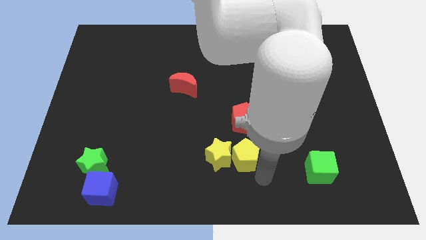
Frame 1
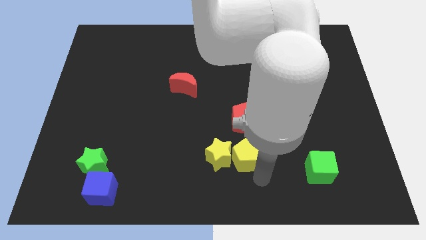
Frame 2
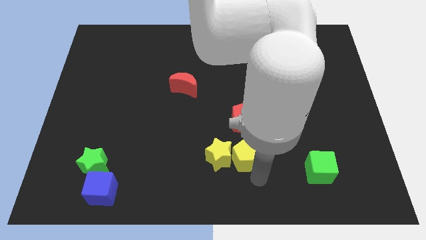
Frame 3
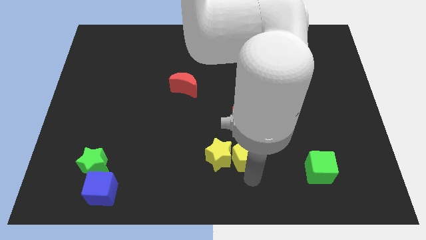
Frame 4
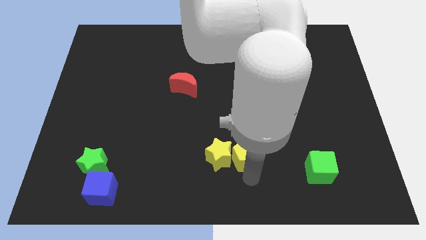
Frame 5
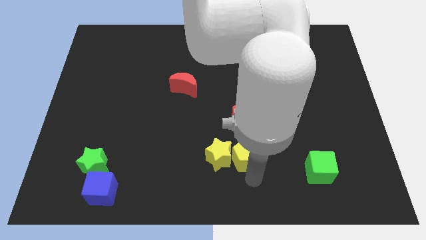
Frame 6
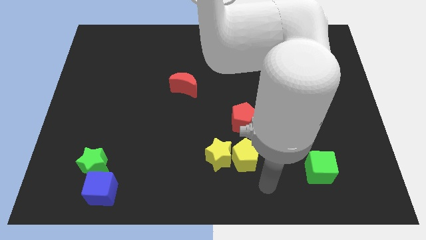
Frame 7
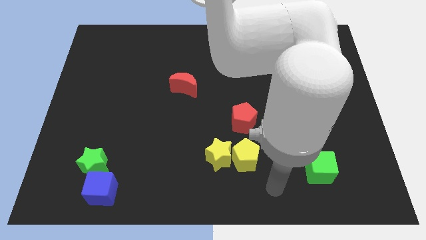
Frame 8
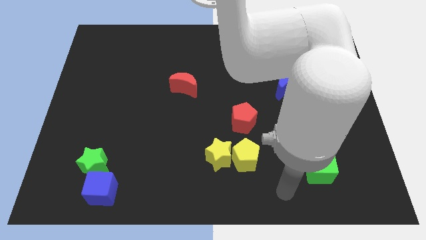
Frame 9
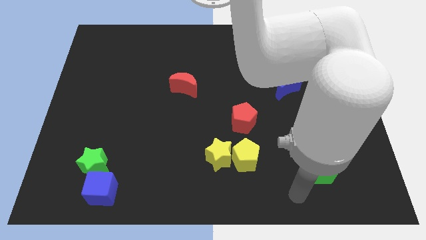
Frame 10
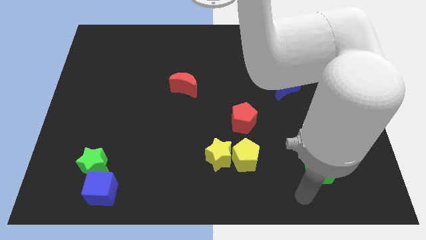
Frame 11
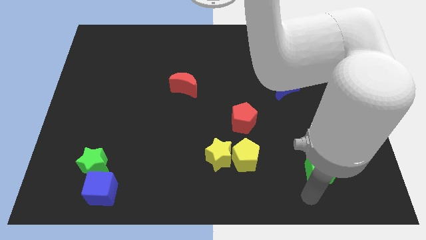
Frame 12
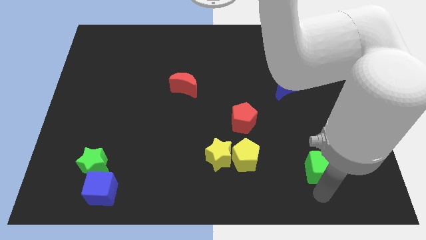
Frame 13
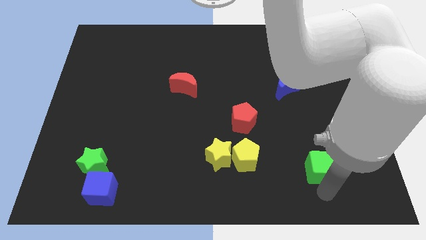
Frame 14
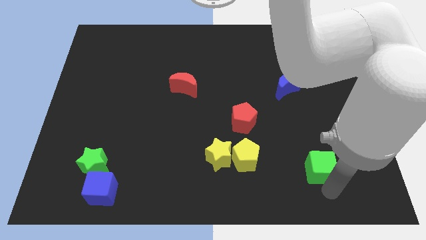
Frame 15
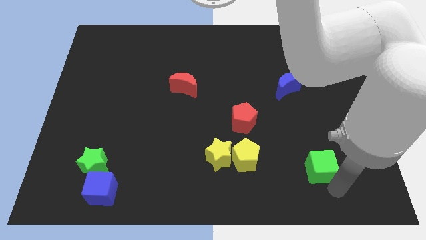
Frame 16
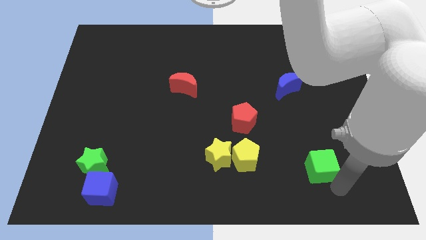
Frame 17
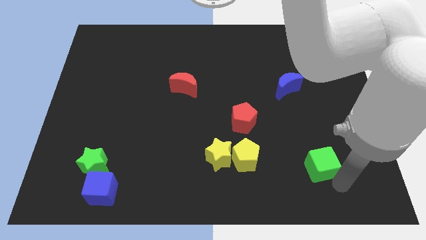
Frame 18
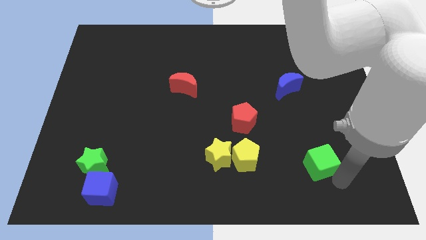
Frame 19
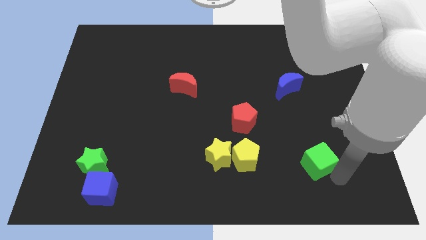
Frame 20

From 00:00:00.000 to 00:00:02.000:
move your arm towards the green cube

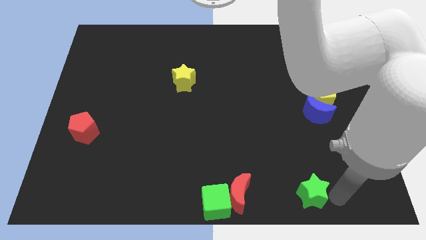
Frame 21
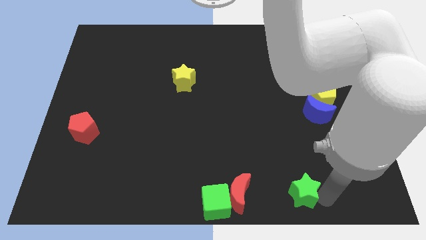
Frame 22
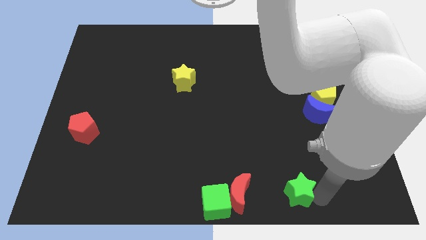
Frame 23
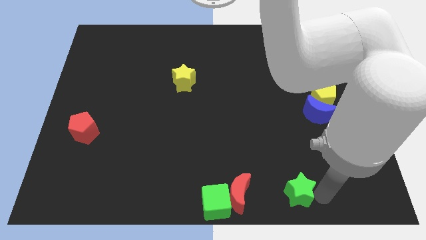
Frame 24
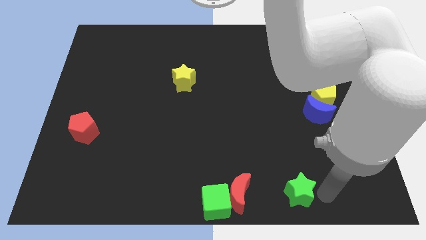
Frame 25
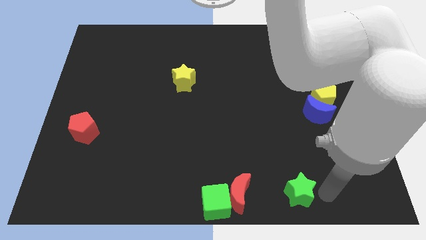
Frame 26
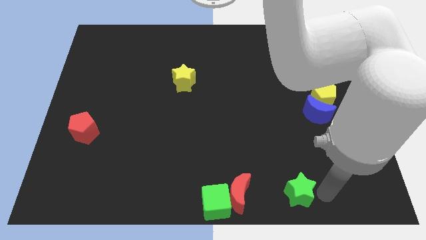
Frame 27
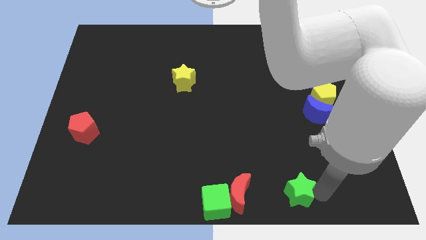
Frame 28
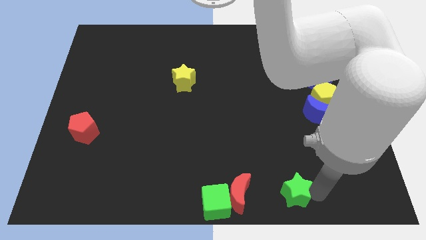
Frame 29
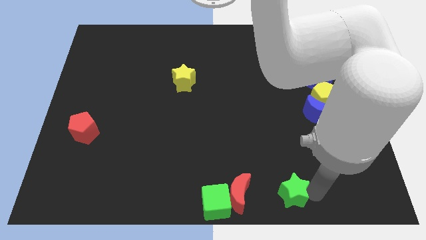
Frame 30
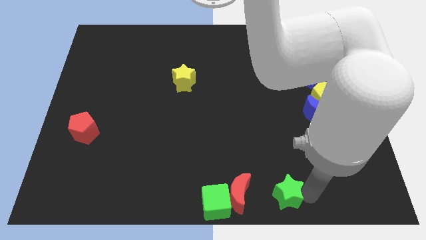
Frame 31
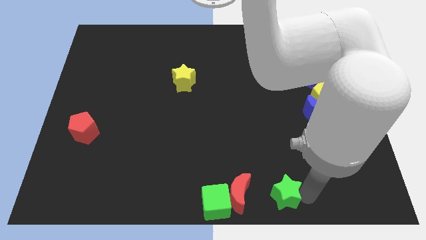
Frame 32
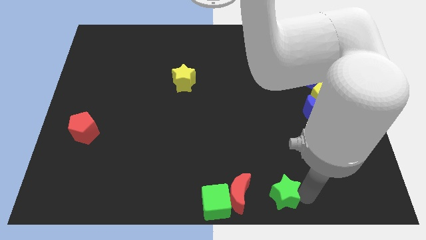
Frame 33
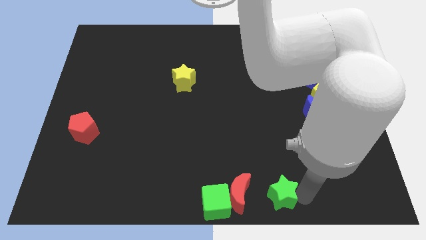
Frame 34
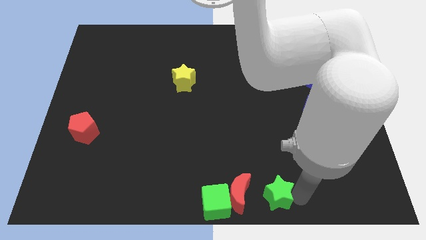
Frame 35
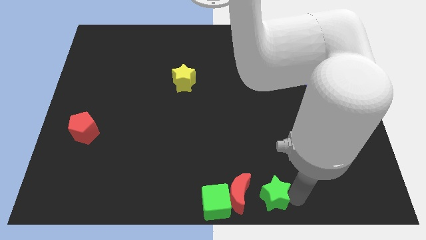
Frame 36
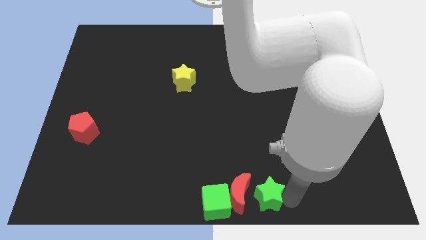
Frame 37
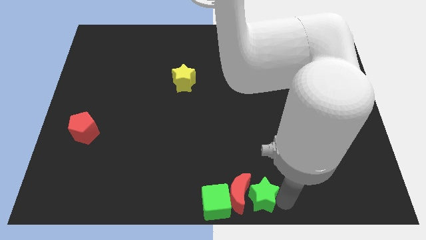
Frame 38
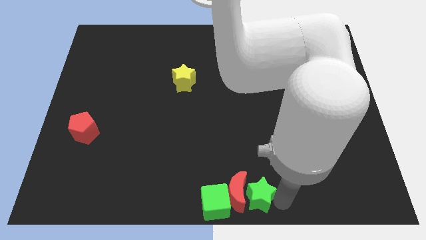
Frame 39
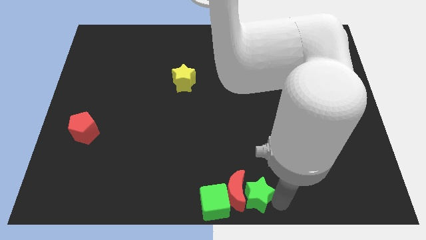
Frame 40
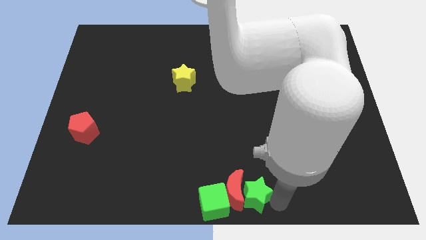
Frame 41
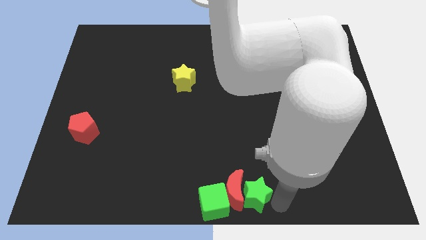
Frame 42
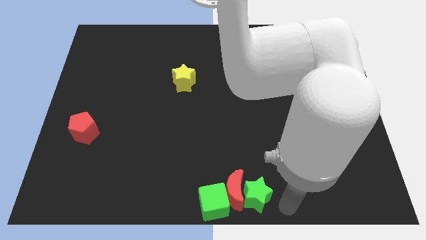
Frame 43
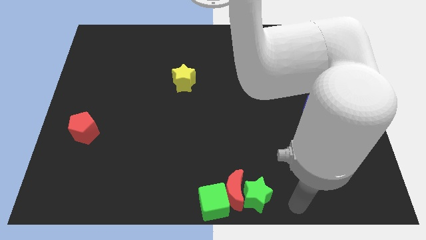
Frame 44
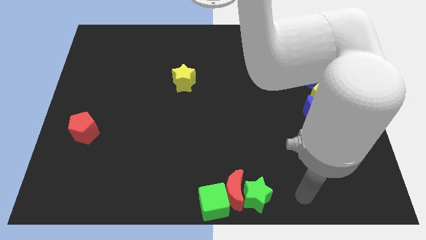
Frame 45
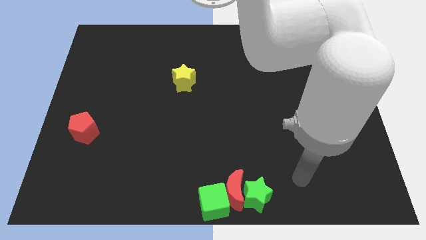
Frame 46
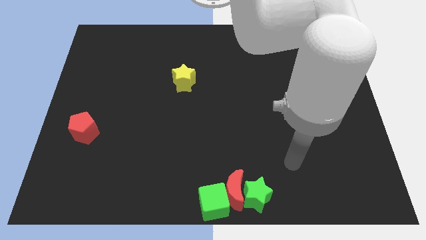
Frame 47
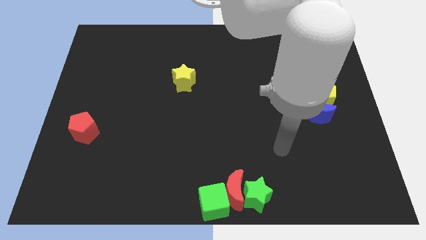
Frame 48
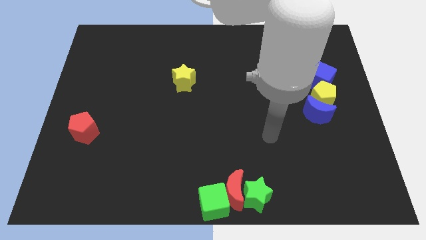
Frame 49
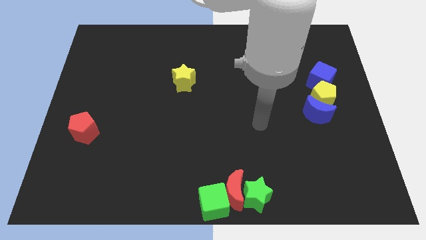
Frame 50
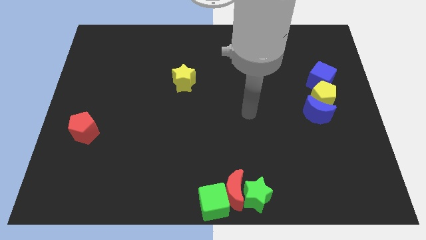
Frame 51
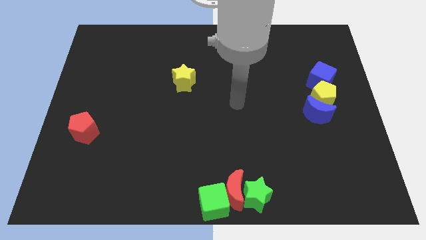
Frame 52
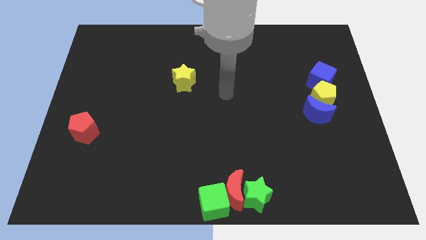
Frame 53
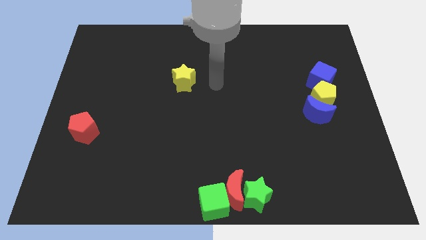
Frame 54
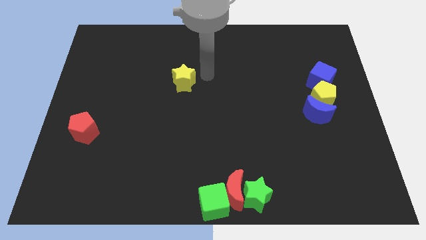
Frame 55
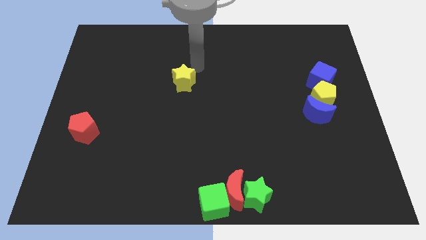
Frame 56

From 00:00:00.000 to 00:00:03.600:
push the green star into the red moon

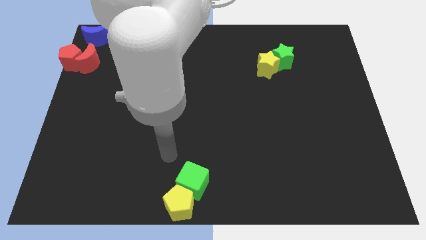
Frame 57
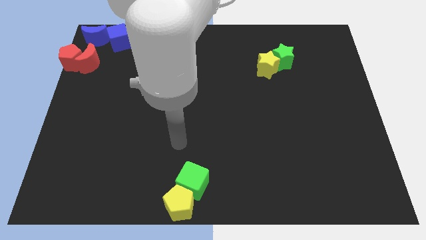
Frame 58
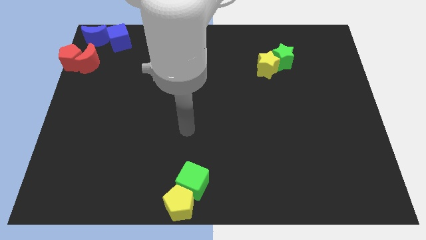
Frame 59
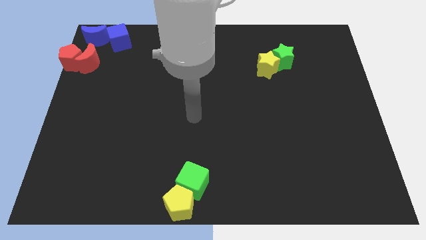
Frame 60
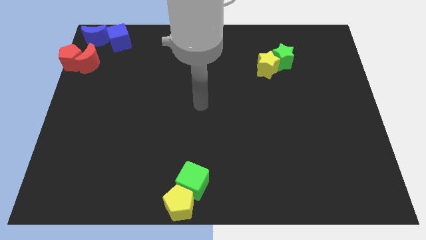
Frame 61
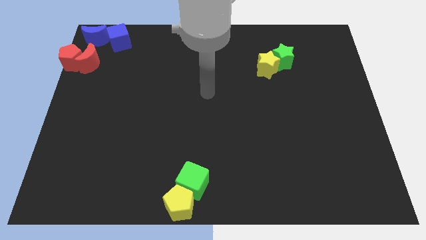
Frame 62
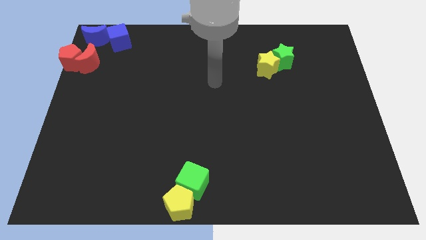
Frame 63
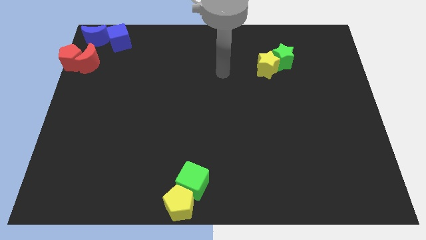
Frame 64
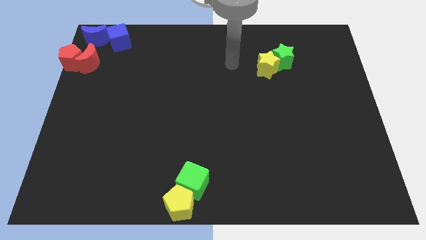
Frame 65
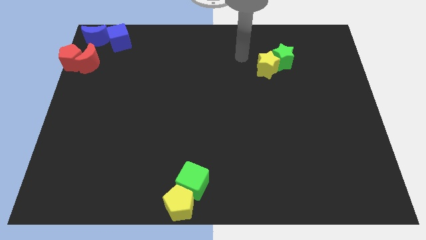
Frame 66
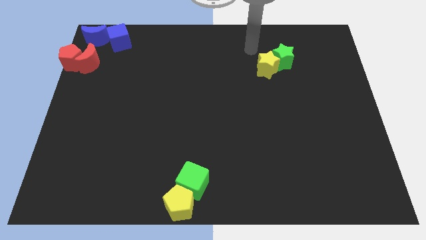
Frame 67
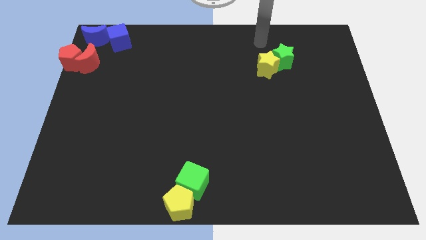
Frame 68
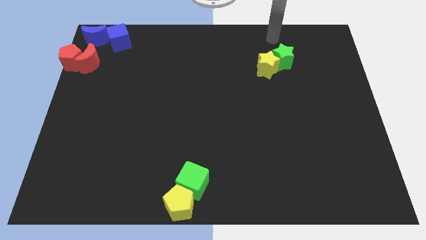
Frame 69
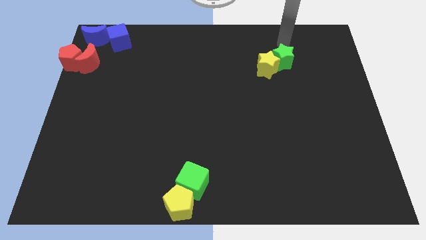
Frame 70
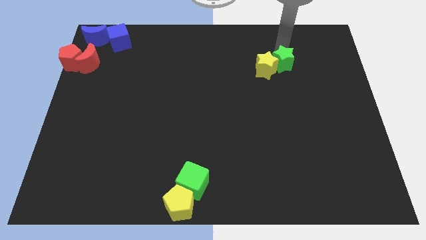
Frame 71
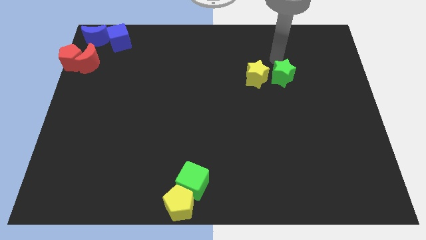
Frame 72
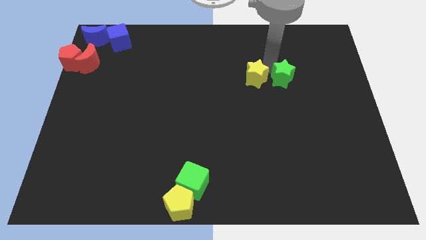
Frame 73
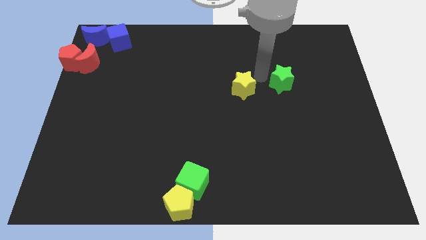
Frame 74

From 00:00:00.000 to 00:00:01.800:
separate the green and yellow stars

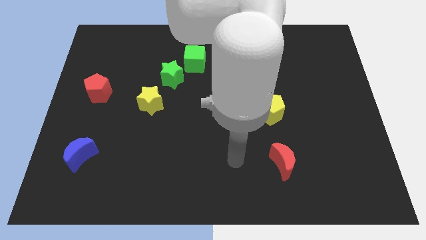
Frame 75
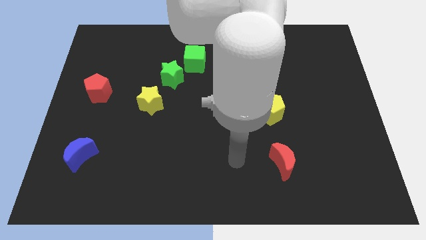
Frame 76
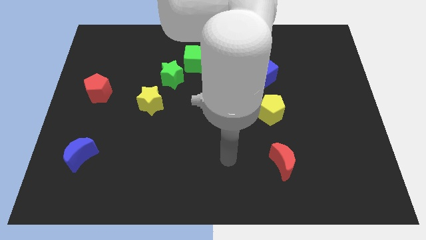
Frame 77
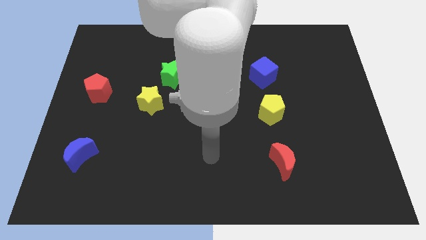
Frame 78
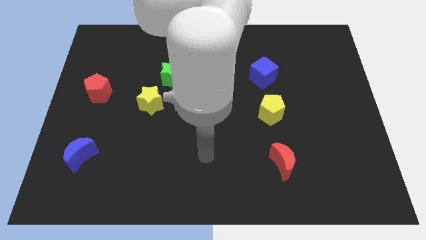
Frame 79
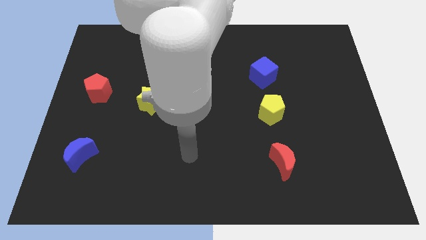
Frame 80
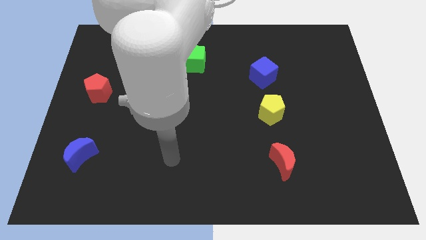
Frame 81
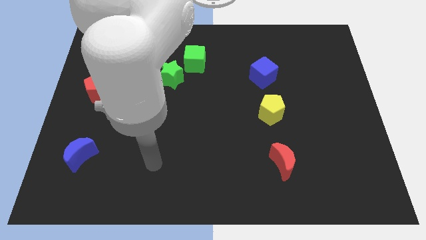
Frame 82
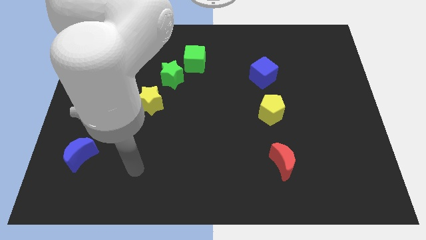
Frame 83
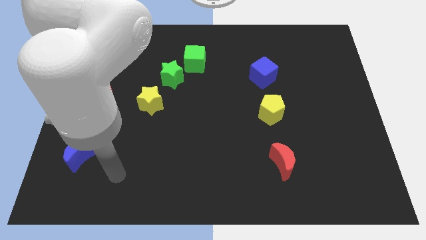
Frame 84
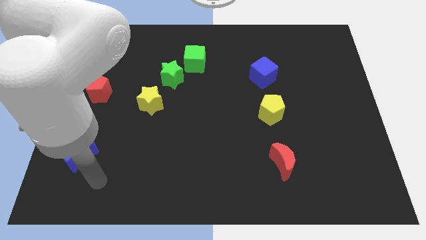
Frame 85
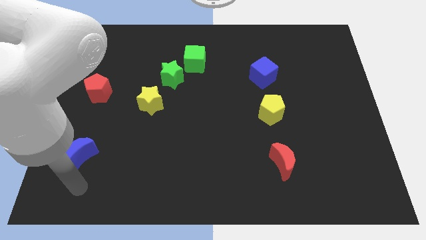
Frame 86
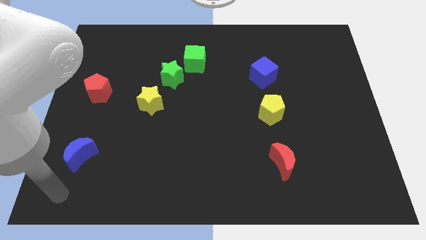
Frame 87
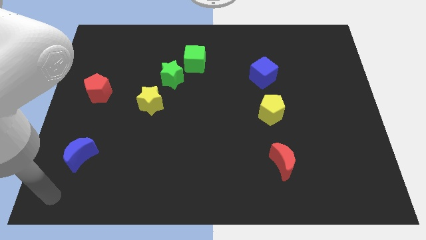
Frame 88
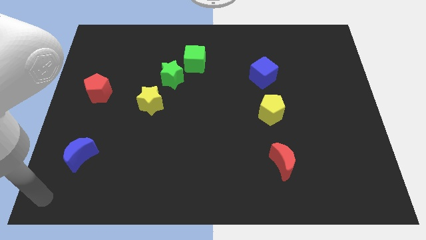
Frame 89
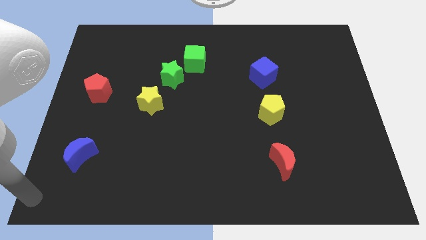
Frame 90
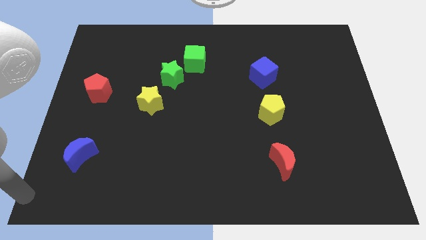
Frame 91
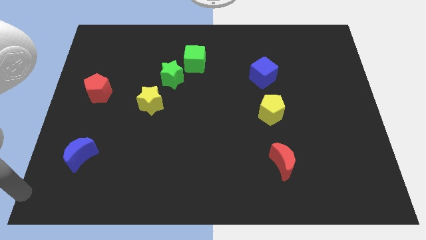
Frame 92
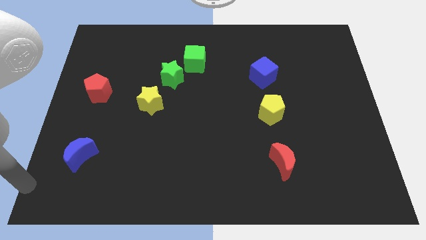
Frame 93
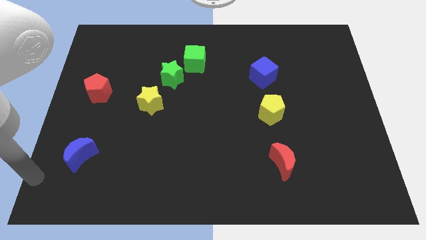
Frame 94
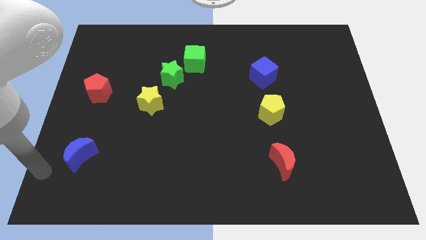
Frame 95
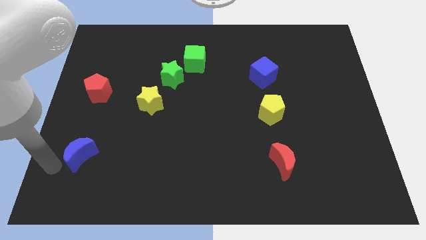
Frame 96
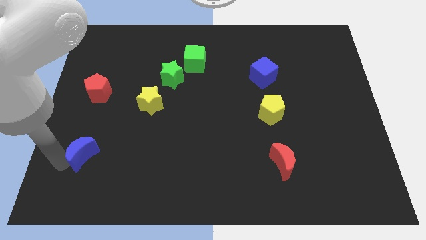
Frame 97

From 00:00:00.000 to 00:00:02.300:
place the arm left to the blue moon
